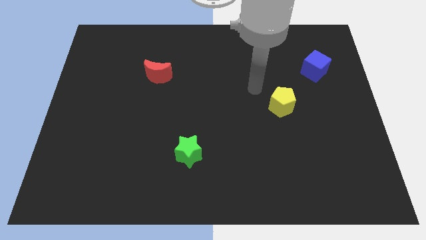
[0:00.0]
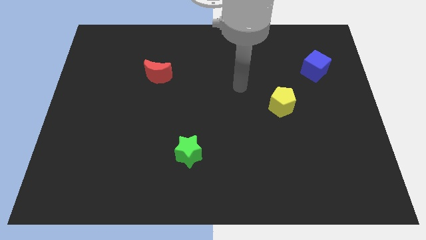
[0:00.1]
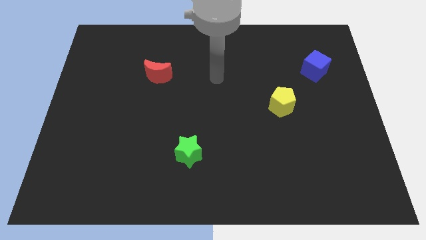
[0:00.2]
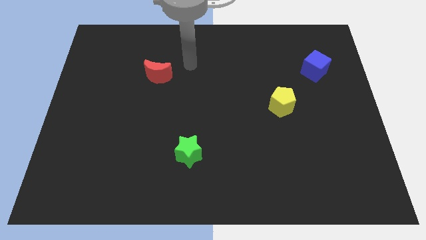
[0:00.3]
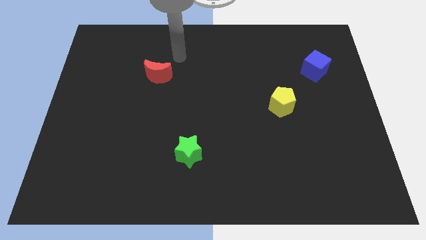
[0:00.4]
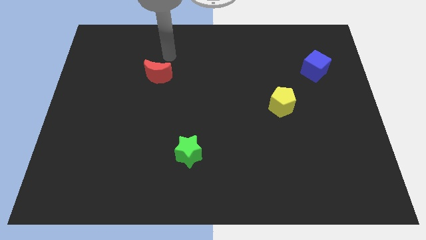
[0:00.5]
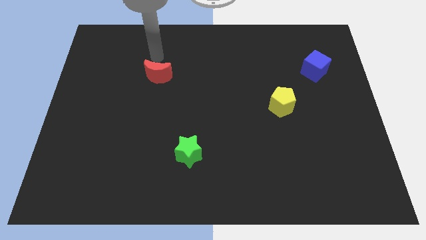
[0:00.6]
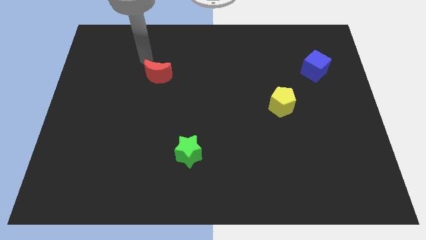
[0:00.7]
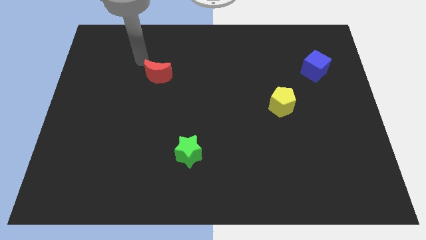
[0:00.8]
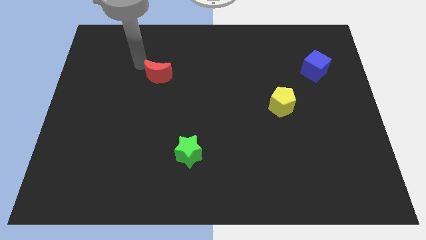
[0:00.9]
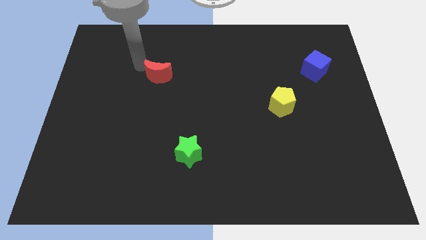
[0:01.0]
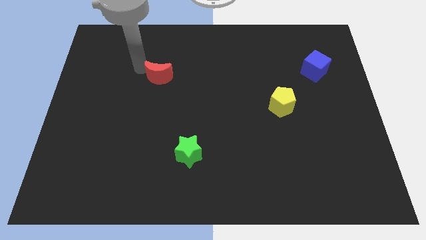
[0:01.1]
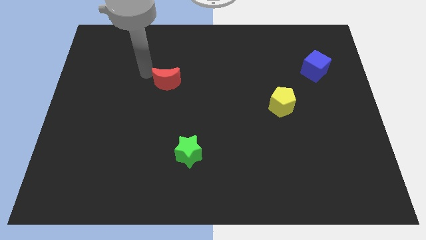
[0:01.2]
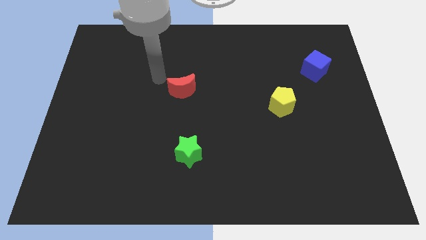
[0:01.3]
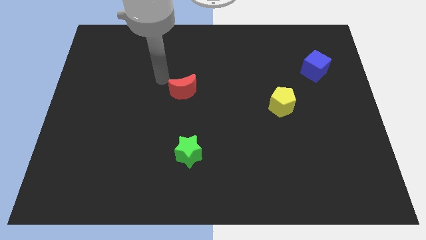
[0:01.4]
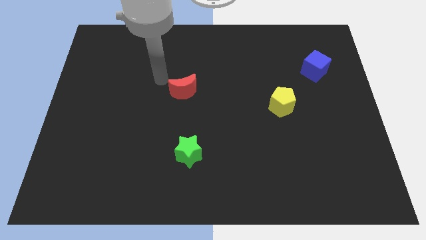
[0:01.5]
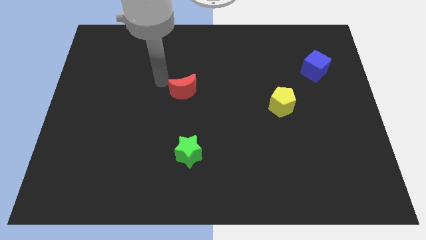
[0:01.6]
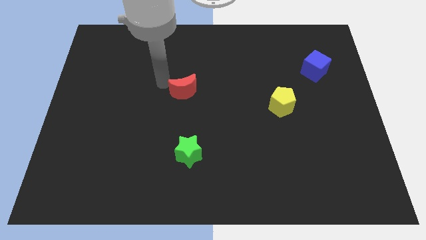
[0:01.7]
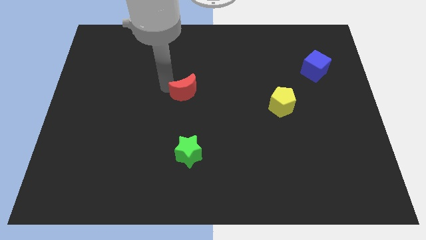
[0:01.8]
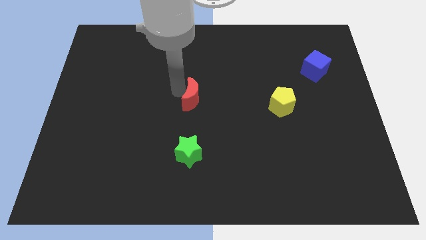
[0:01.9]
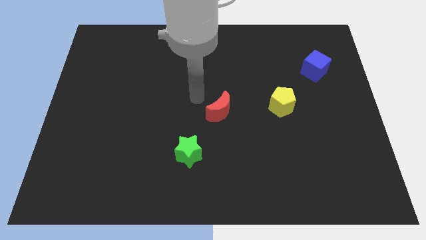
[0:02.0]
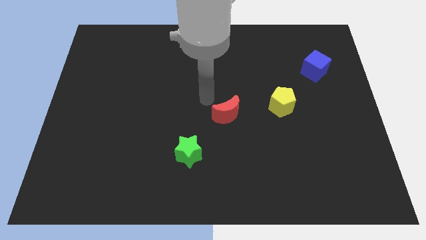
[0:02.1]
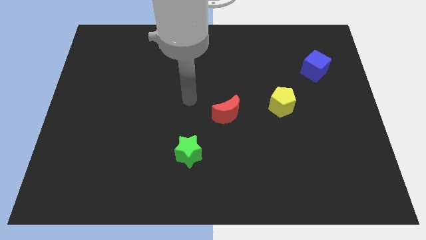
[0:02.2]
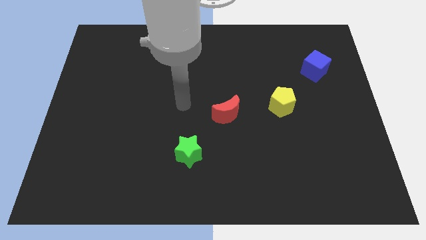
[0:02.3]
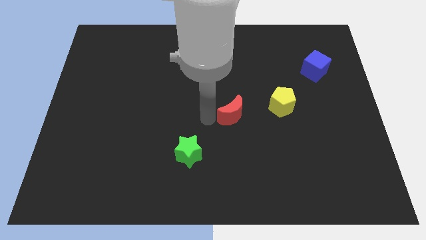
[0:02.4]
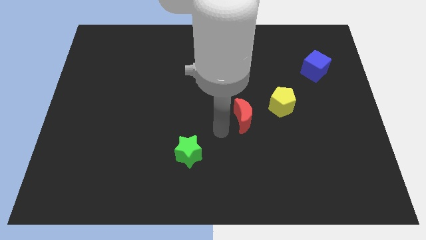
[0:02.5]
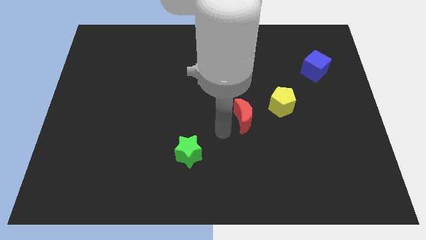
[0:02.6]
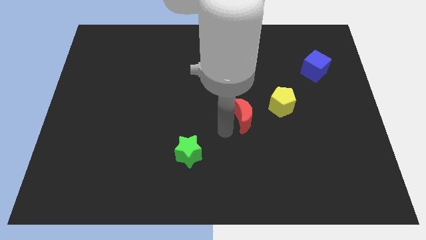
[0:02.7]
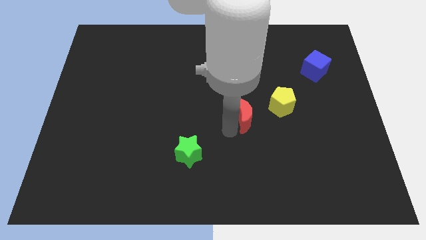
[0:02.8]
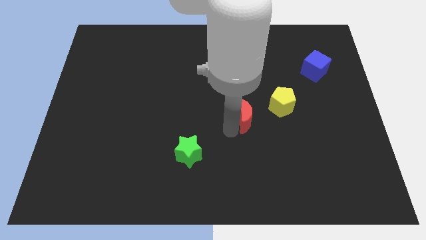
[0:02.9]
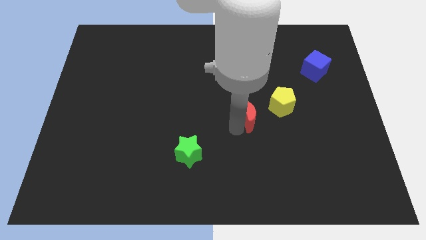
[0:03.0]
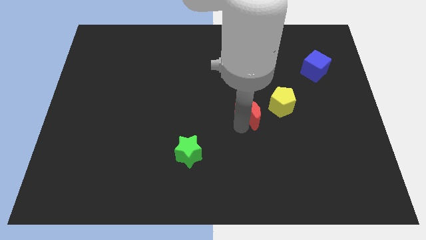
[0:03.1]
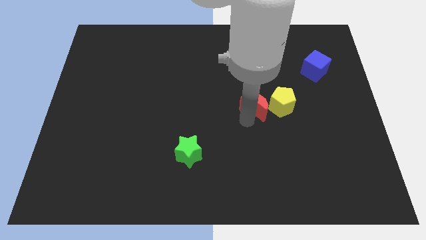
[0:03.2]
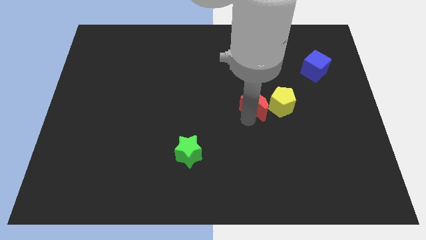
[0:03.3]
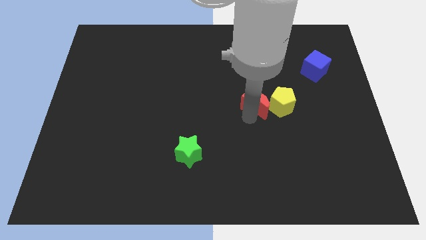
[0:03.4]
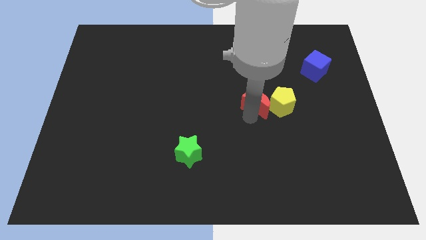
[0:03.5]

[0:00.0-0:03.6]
move the red block next to the yellow block

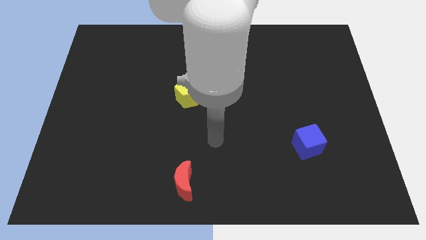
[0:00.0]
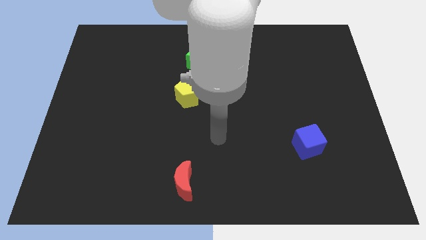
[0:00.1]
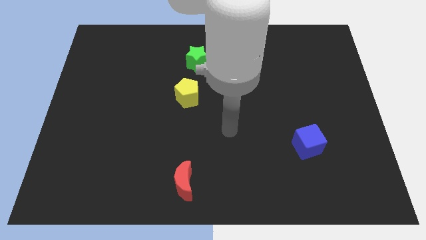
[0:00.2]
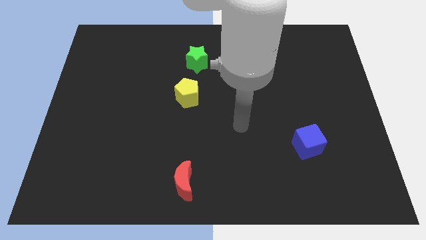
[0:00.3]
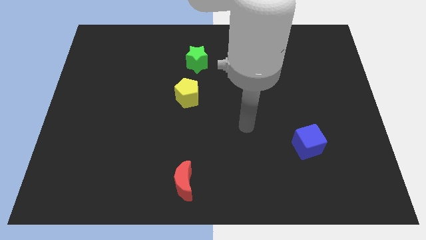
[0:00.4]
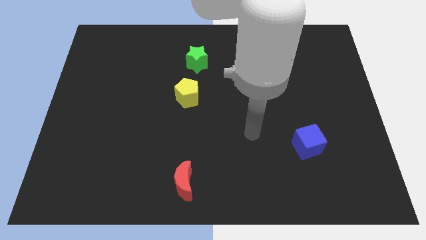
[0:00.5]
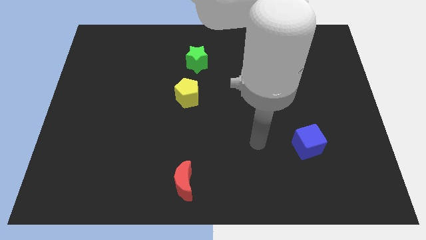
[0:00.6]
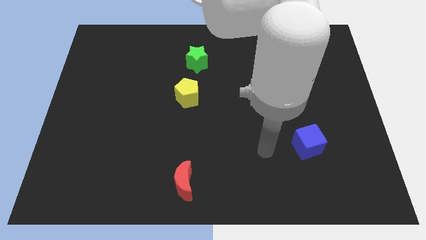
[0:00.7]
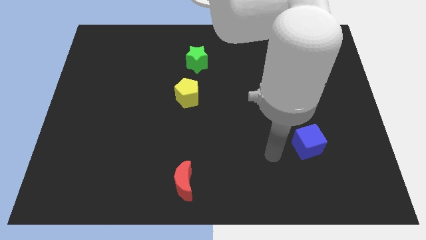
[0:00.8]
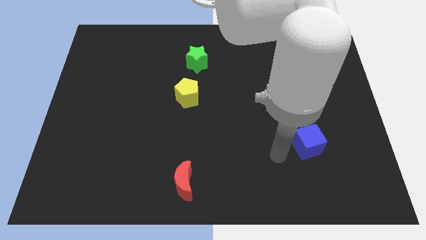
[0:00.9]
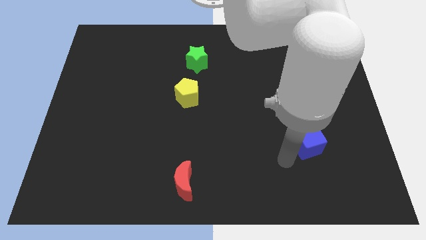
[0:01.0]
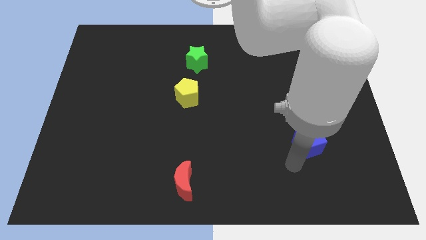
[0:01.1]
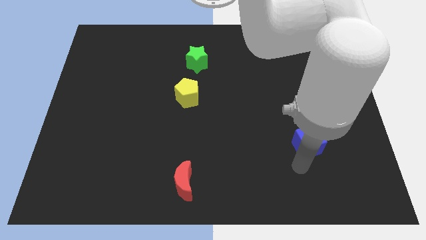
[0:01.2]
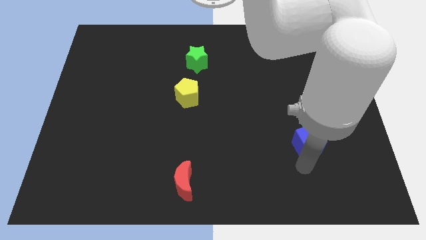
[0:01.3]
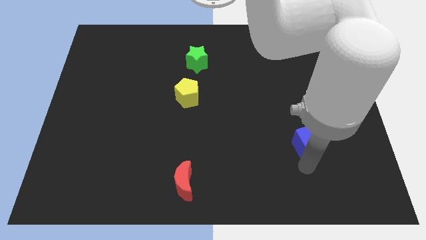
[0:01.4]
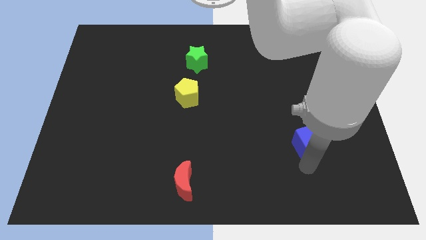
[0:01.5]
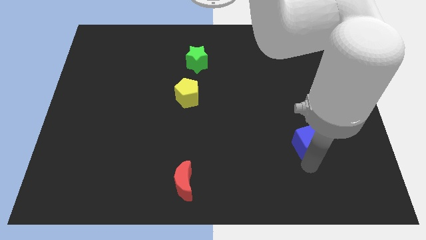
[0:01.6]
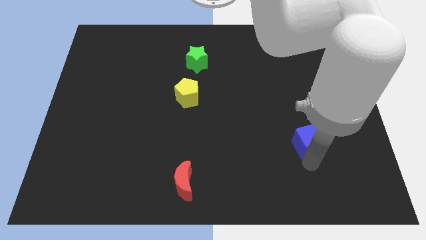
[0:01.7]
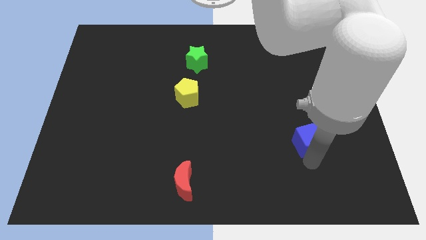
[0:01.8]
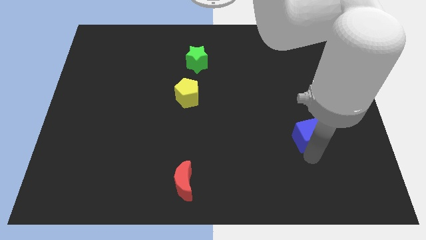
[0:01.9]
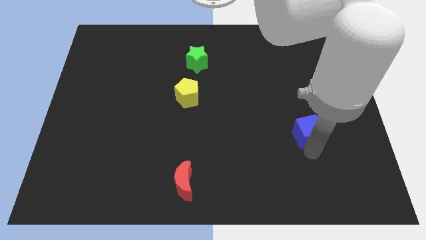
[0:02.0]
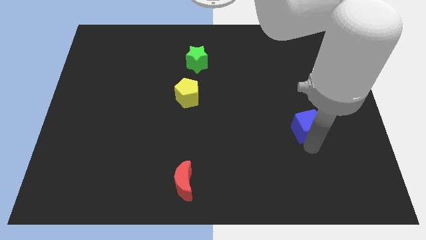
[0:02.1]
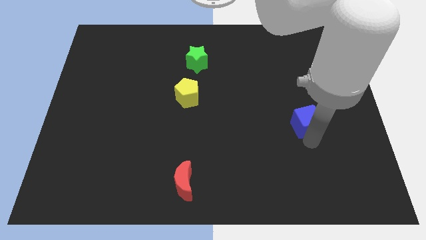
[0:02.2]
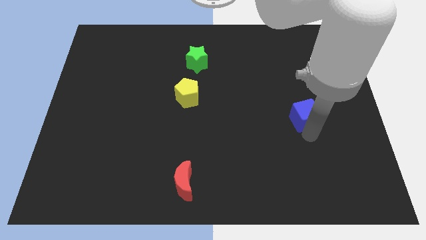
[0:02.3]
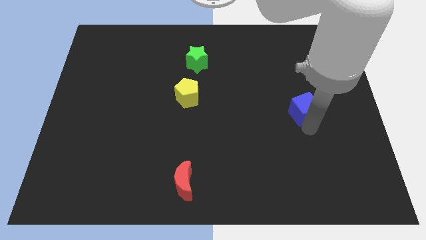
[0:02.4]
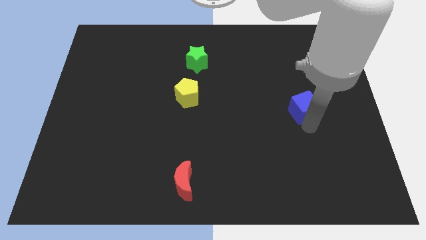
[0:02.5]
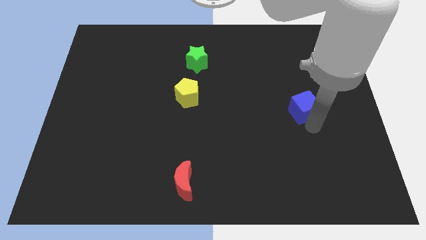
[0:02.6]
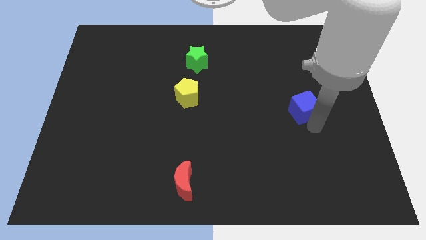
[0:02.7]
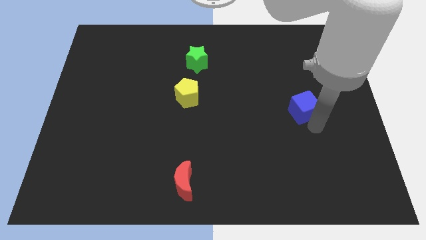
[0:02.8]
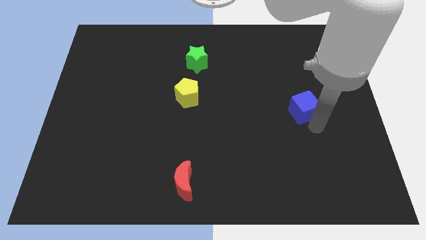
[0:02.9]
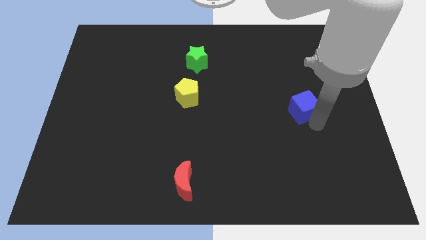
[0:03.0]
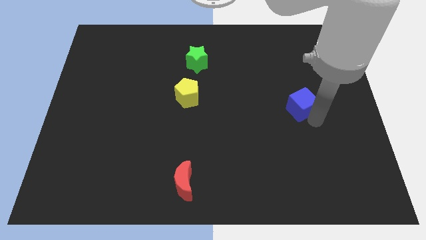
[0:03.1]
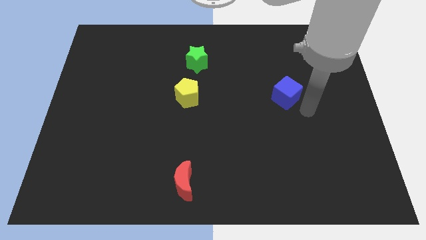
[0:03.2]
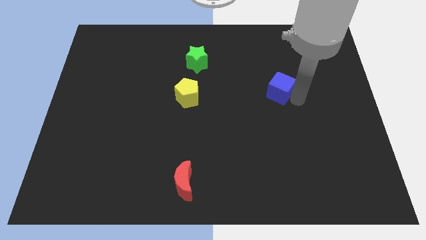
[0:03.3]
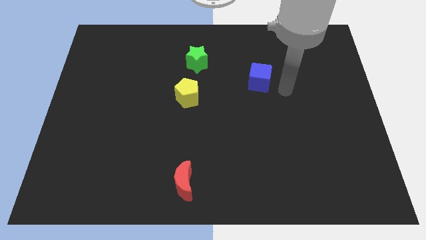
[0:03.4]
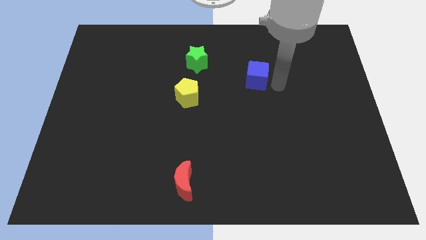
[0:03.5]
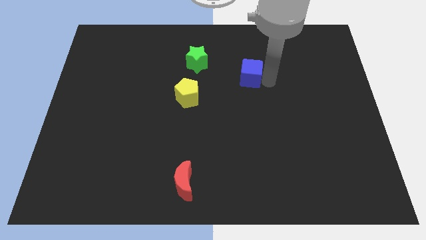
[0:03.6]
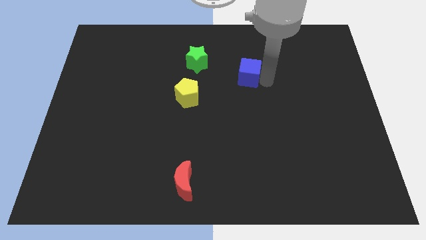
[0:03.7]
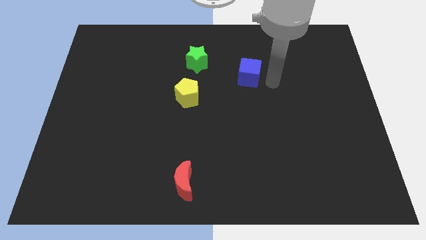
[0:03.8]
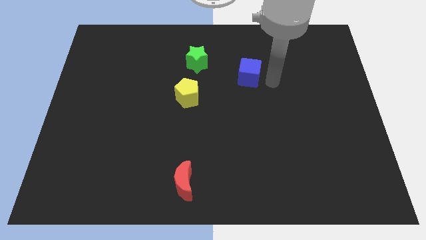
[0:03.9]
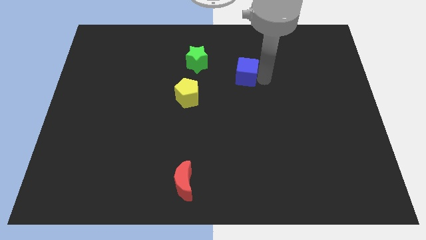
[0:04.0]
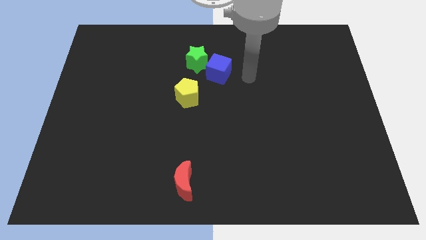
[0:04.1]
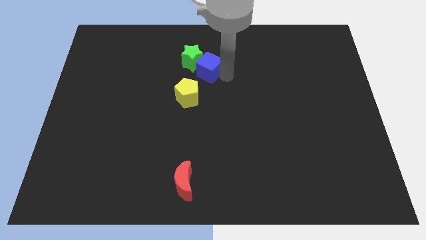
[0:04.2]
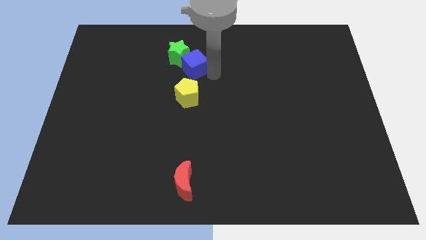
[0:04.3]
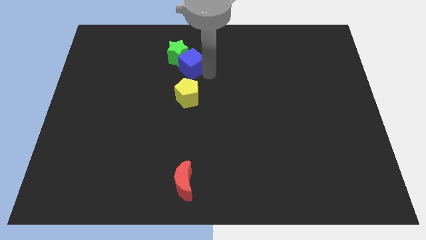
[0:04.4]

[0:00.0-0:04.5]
put the blue block towards the star
